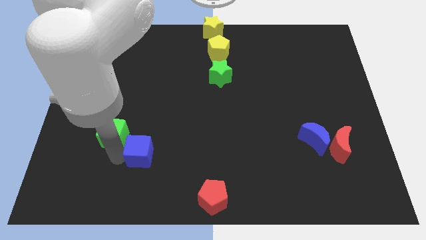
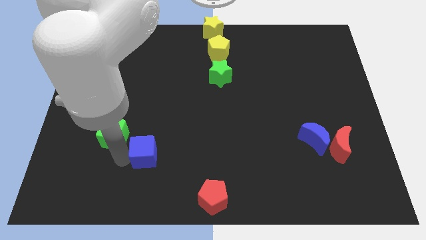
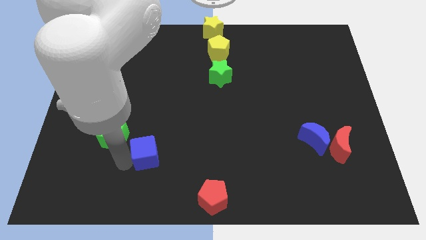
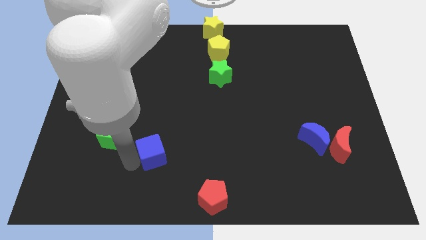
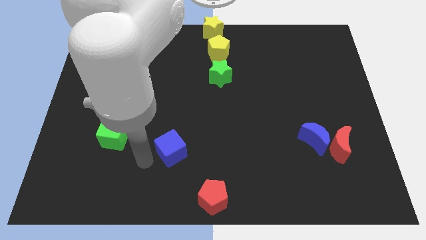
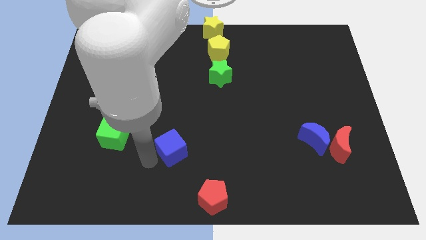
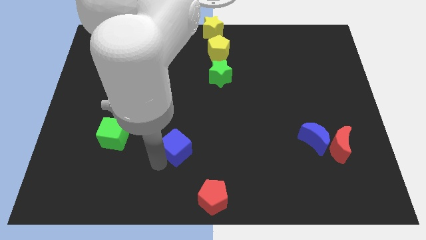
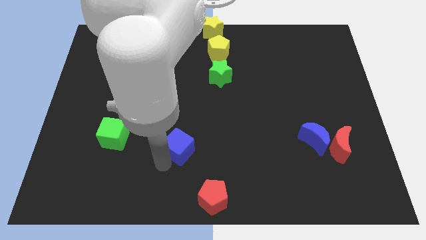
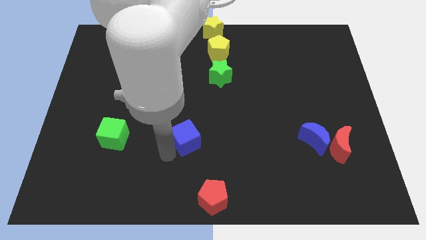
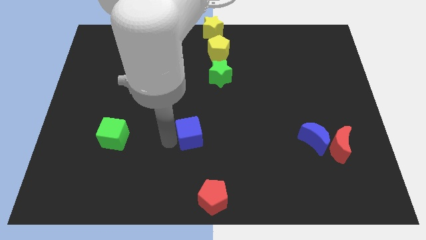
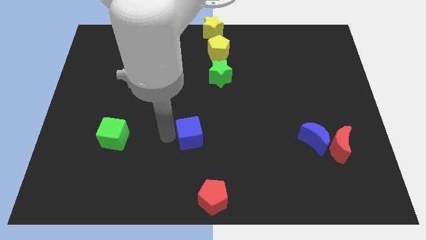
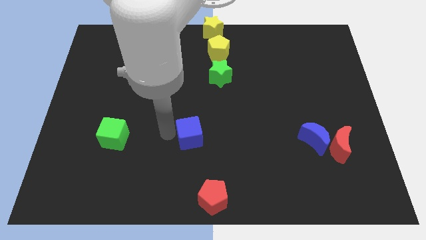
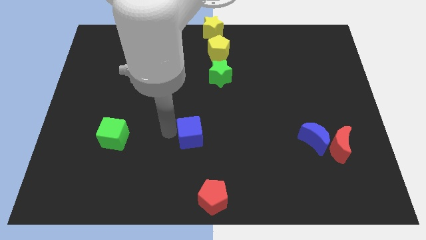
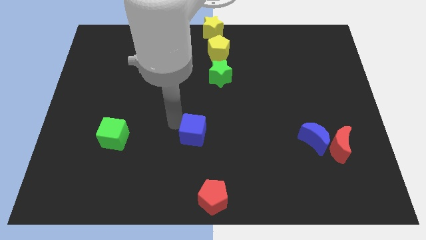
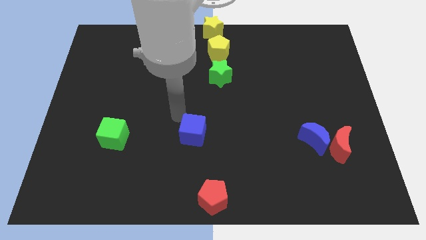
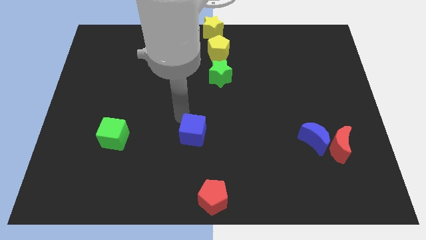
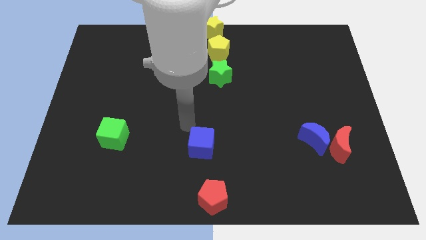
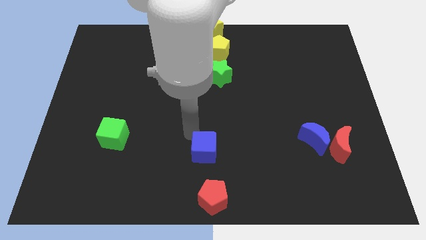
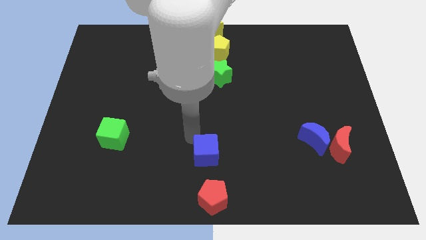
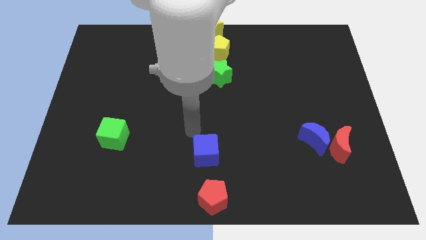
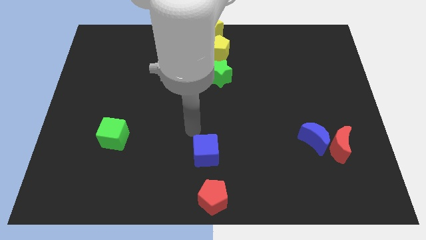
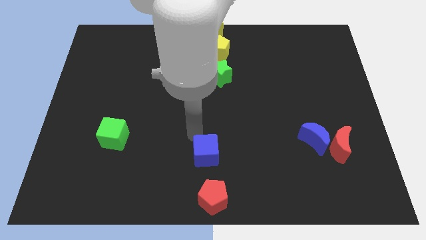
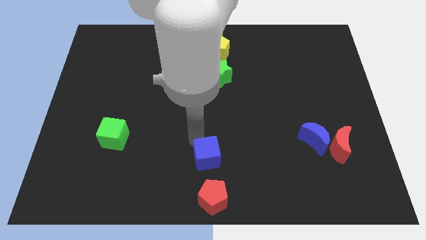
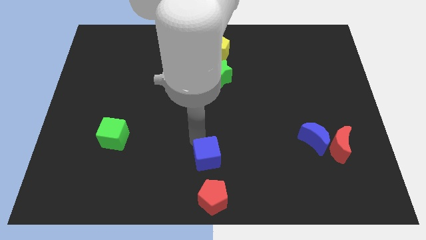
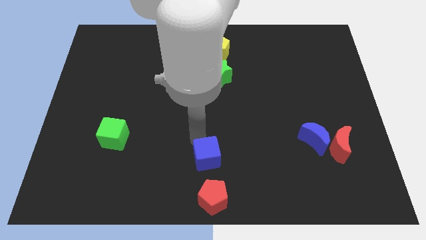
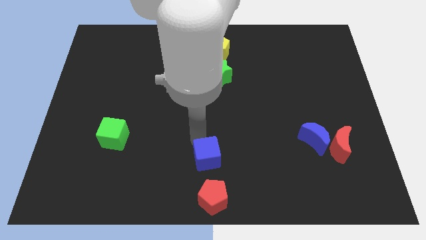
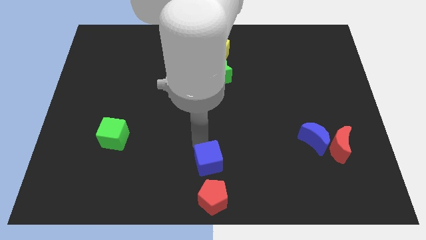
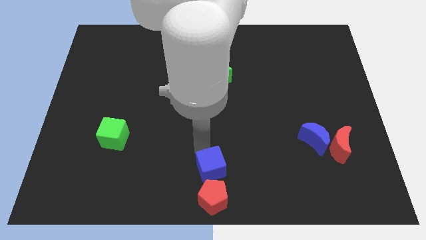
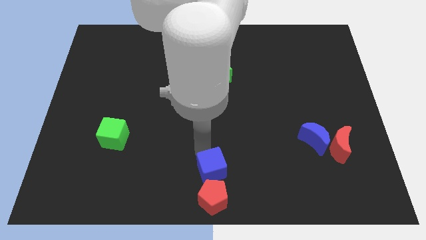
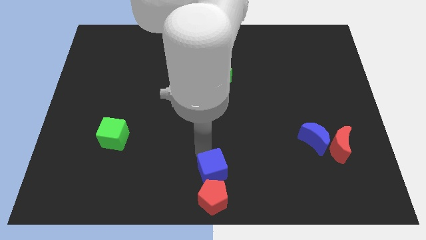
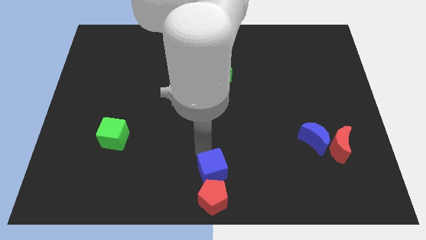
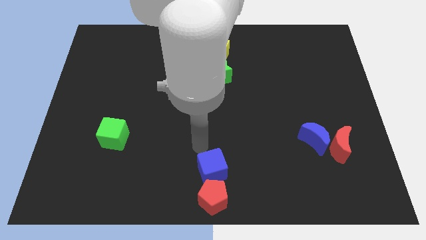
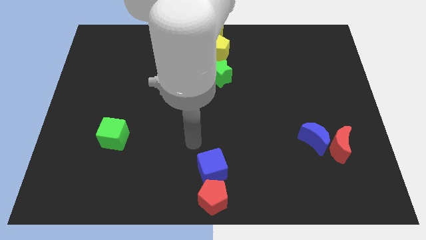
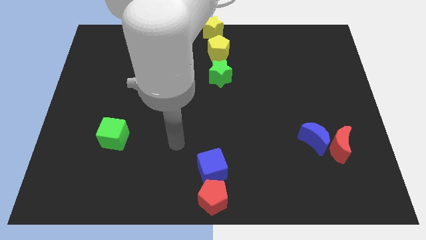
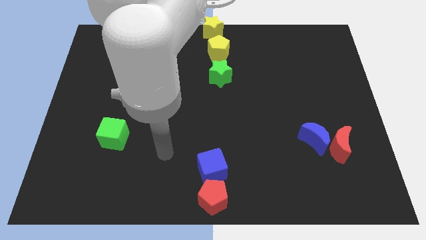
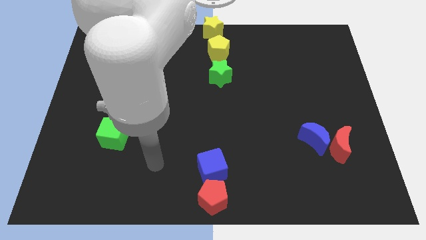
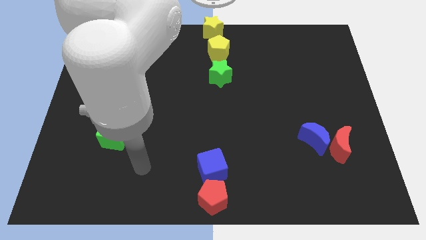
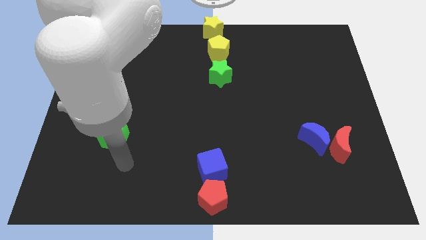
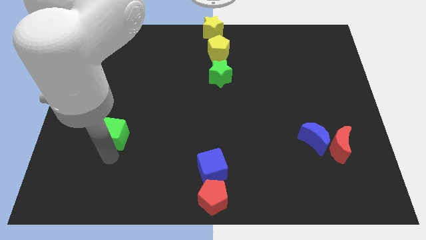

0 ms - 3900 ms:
push the blue cube to the top of the red pentagon

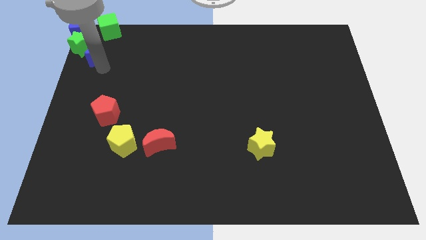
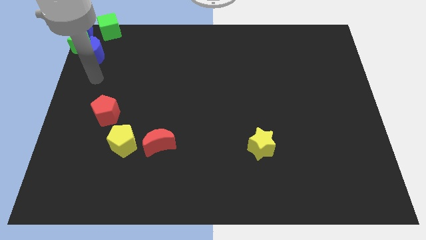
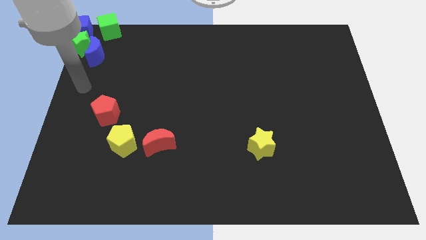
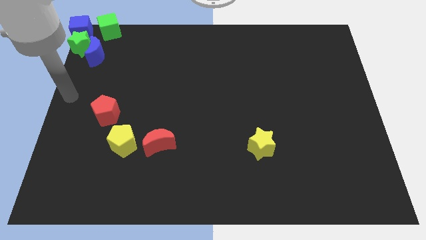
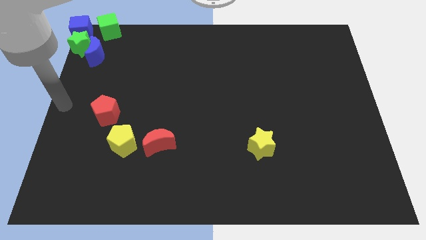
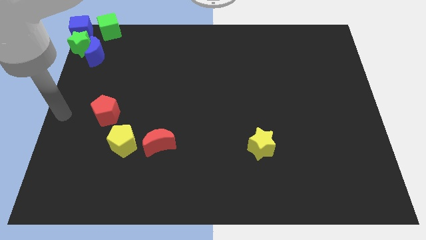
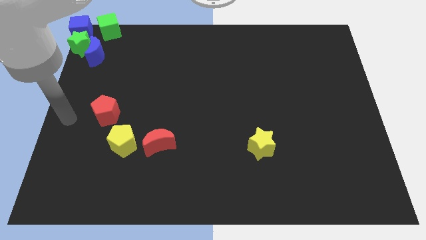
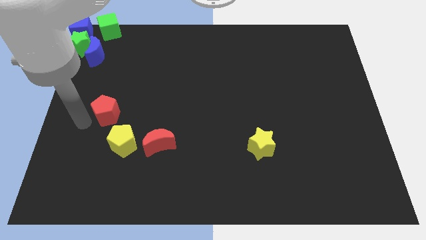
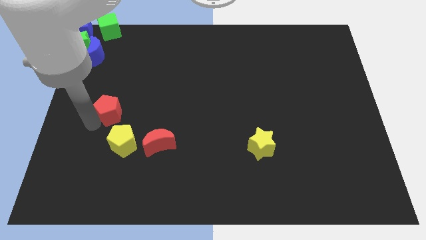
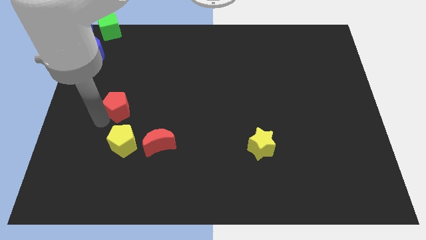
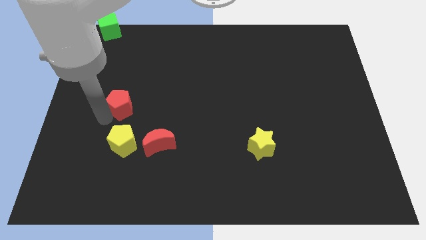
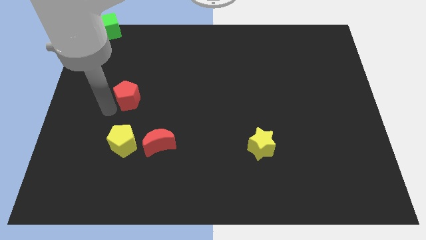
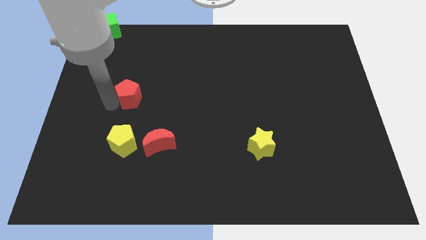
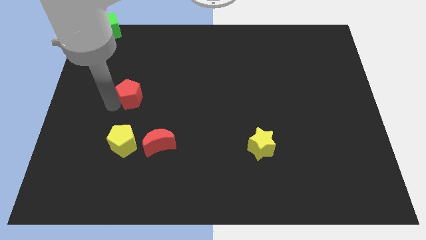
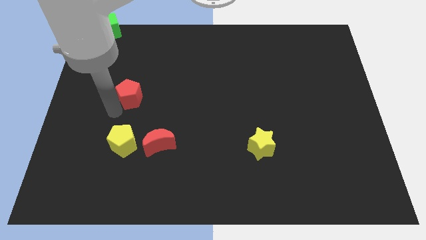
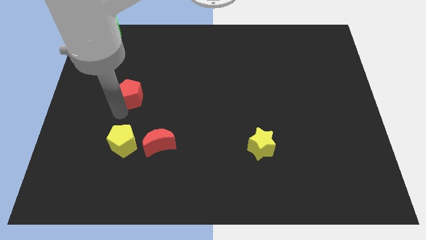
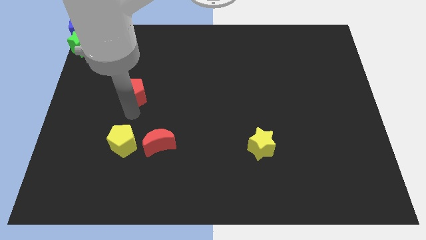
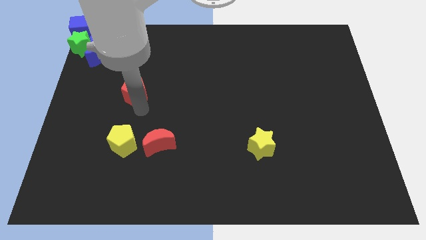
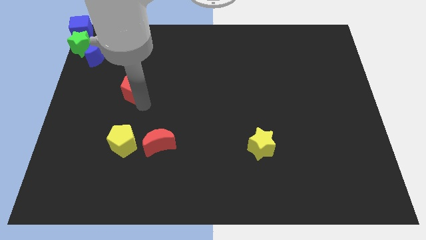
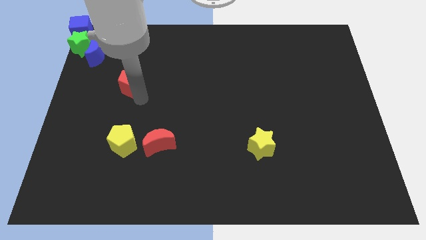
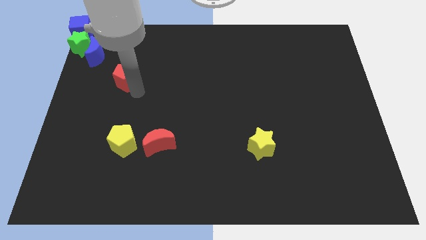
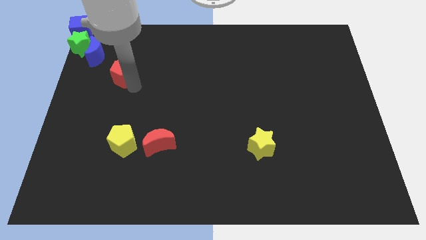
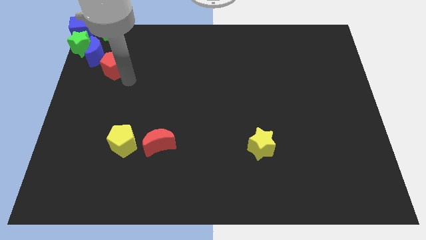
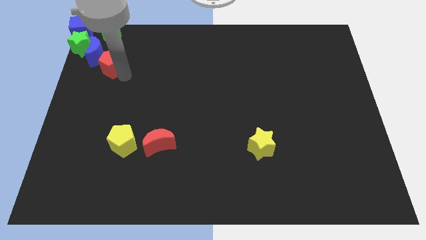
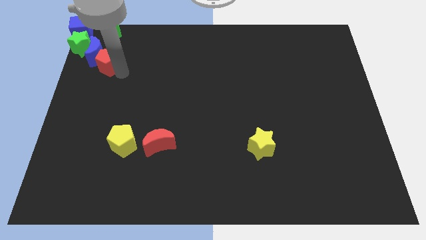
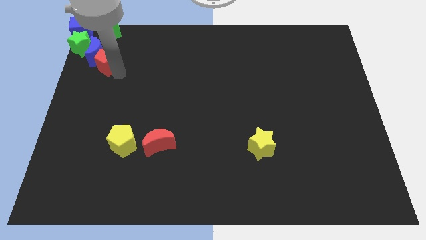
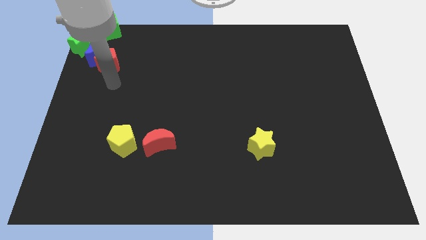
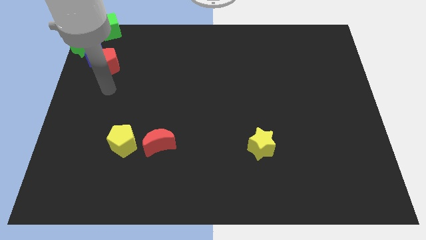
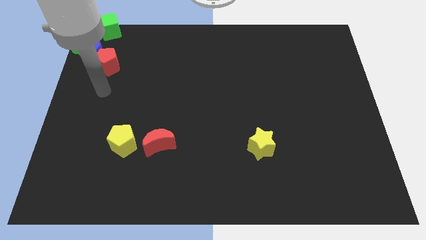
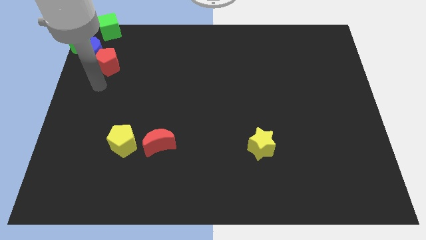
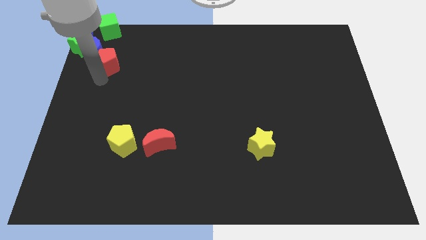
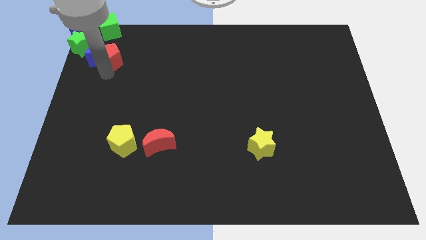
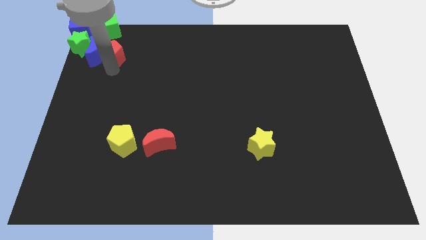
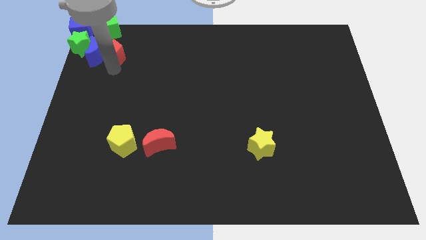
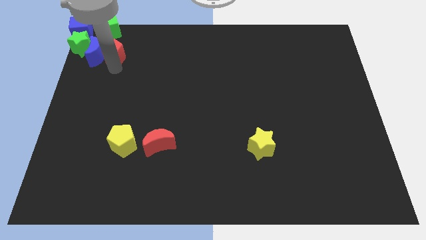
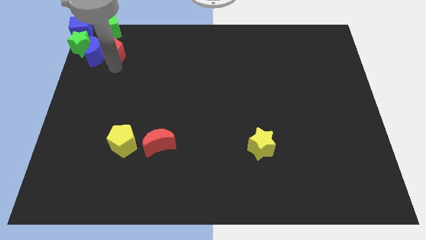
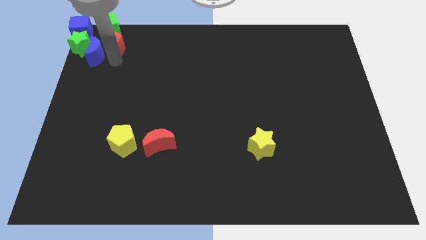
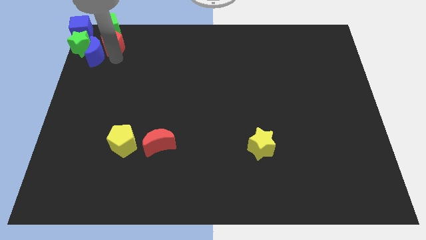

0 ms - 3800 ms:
drag the red pentagon right to the blue moon

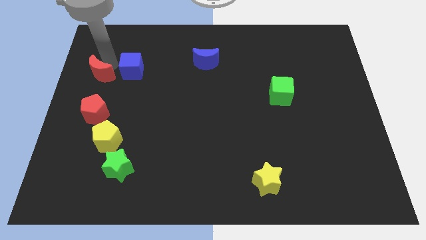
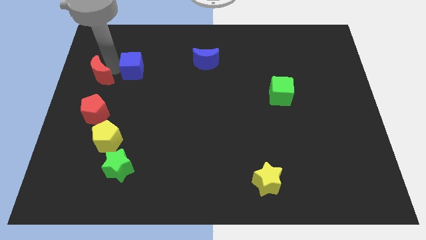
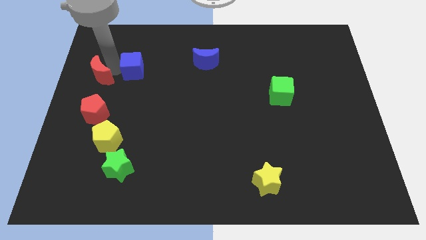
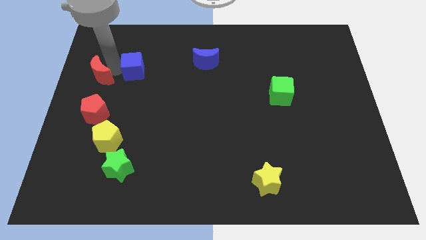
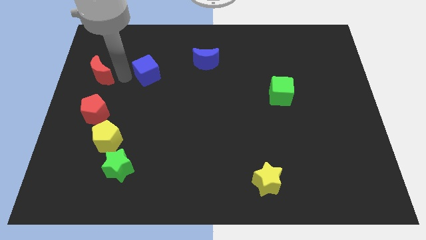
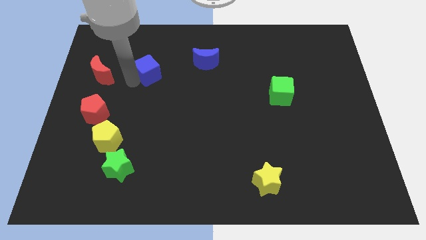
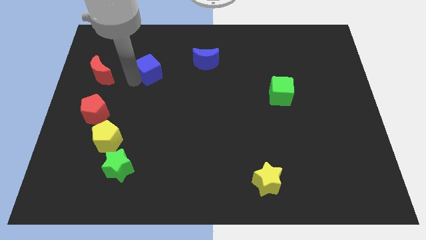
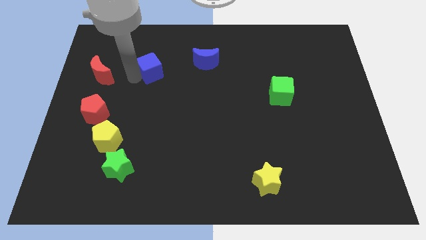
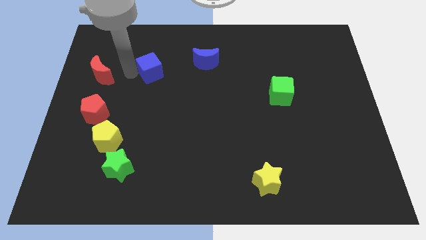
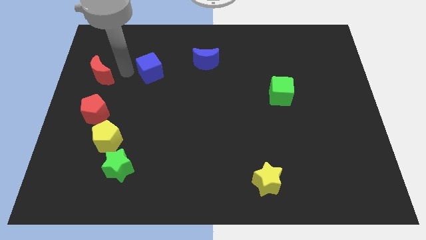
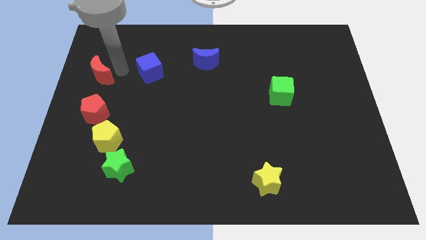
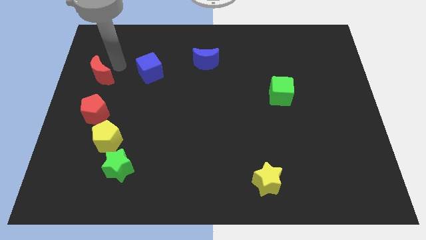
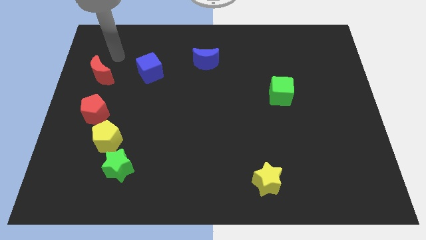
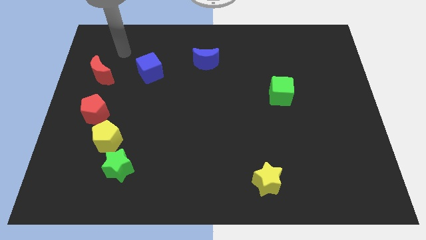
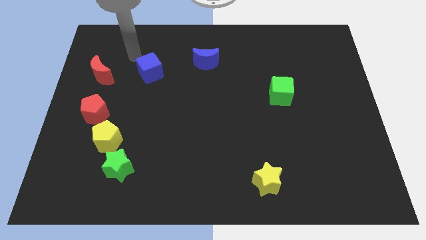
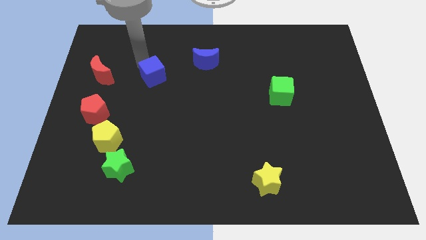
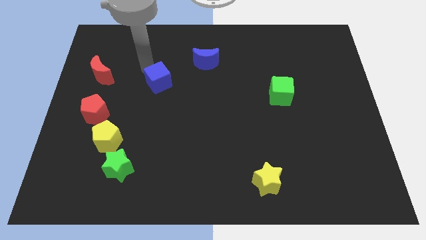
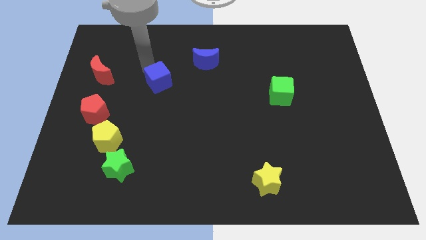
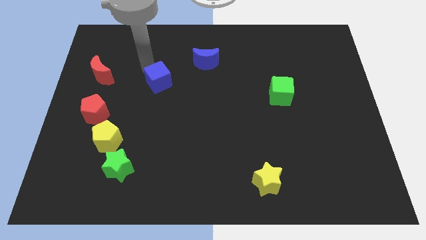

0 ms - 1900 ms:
place the cube between the blue crescent and red crescent
